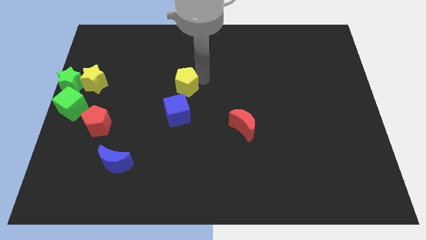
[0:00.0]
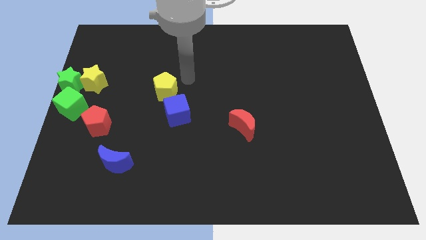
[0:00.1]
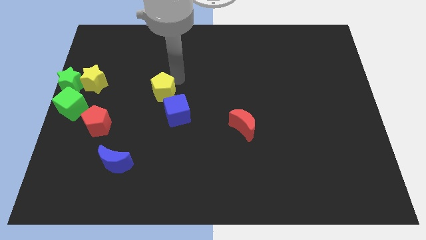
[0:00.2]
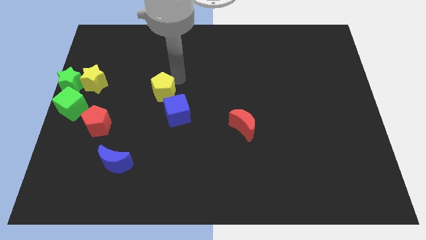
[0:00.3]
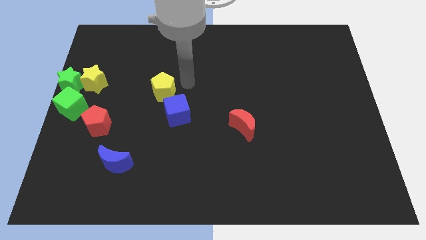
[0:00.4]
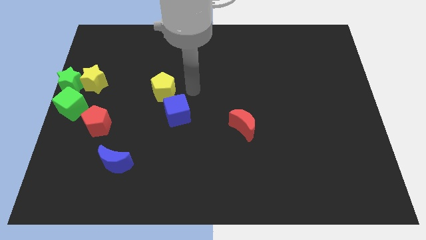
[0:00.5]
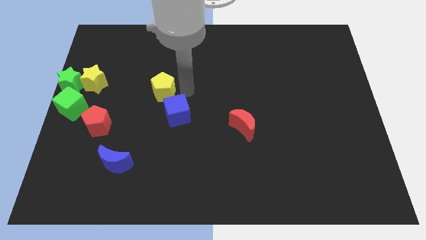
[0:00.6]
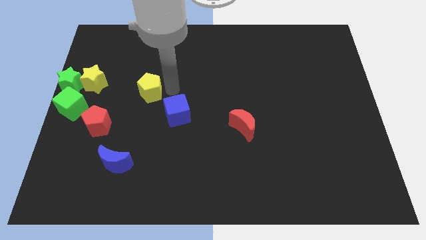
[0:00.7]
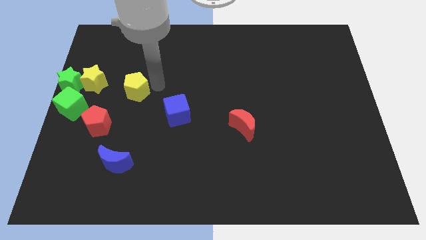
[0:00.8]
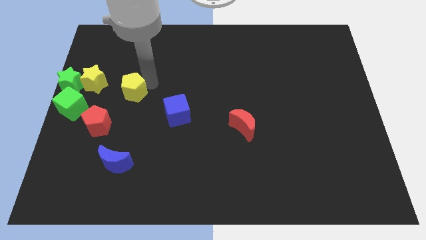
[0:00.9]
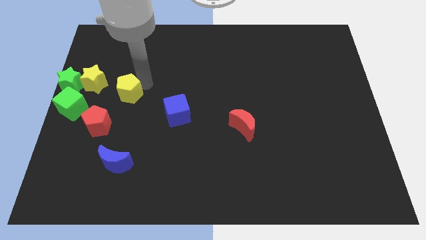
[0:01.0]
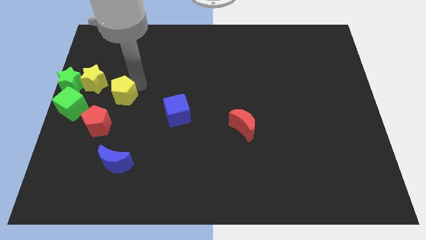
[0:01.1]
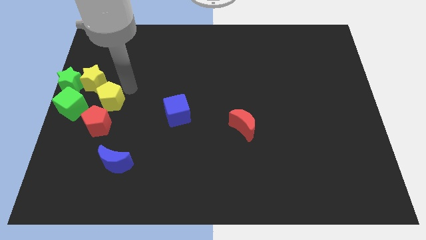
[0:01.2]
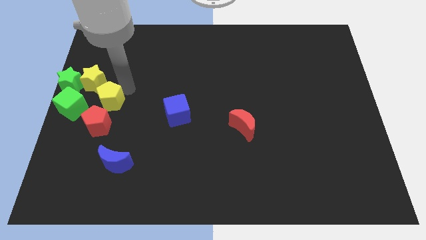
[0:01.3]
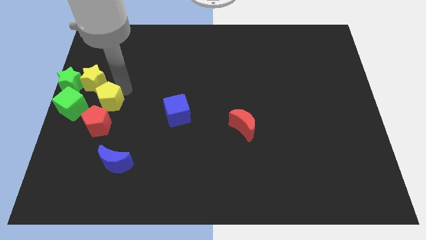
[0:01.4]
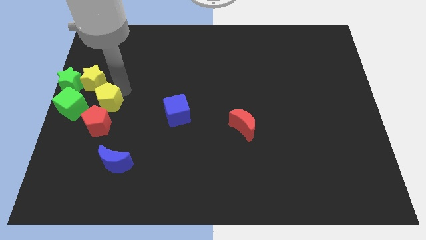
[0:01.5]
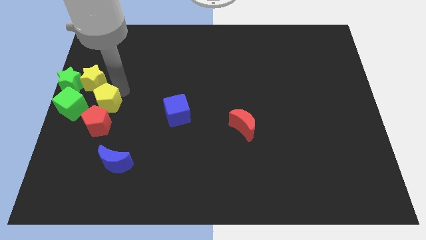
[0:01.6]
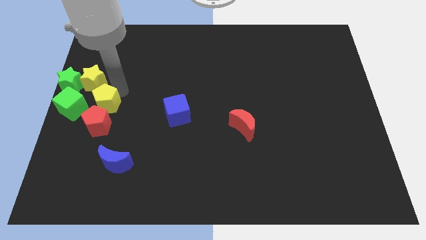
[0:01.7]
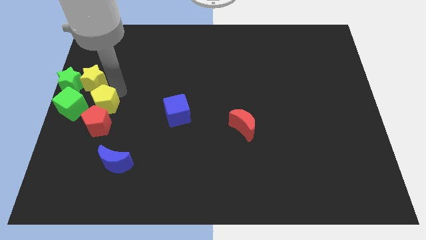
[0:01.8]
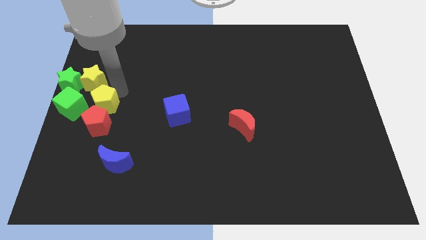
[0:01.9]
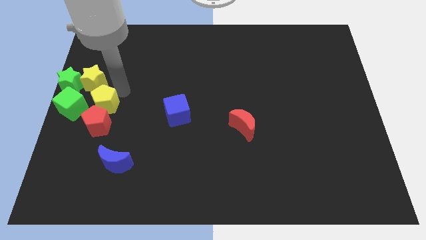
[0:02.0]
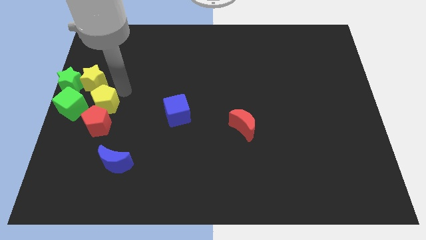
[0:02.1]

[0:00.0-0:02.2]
place the yellow pentagon to the right of green cube

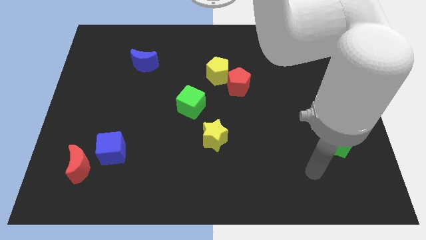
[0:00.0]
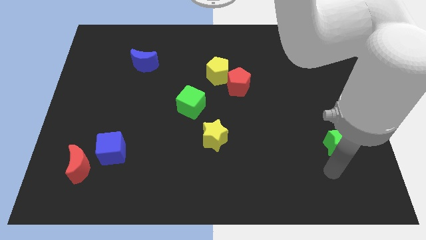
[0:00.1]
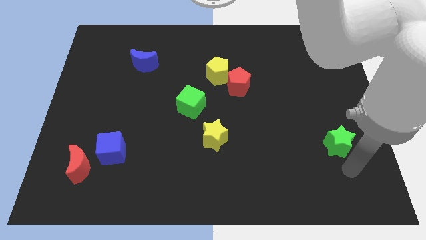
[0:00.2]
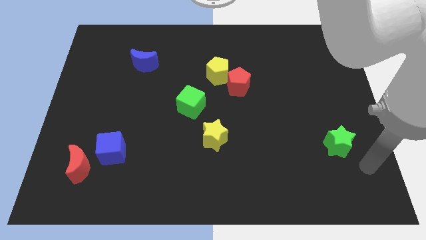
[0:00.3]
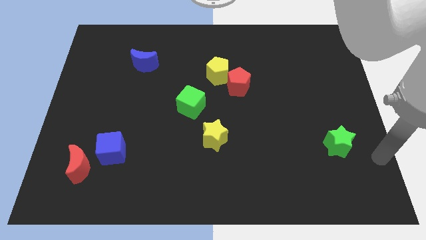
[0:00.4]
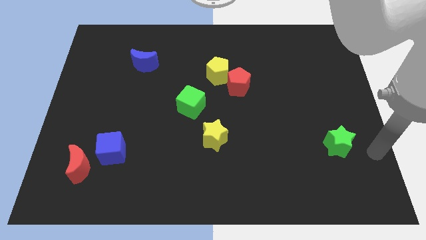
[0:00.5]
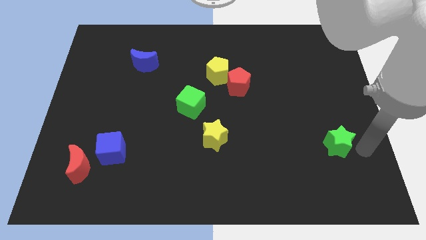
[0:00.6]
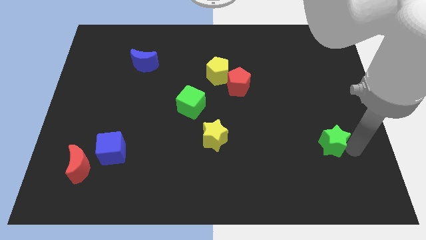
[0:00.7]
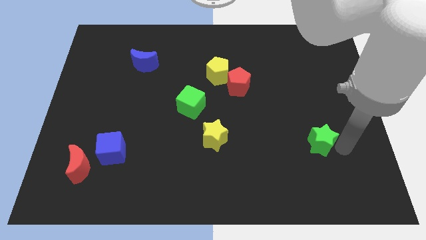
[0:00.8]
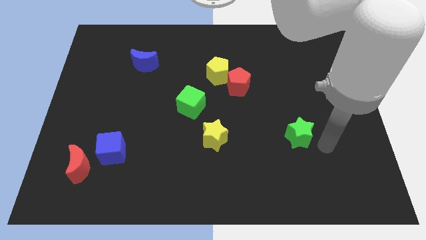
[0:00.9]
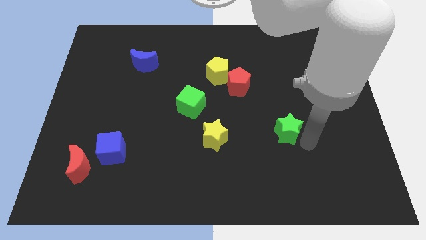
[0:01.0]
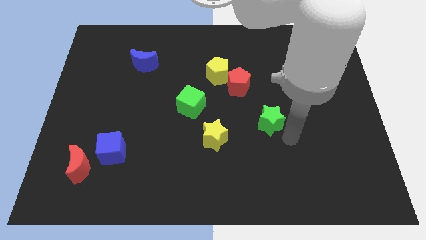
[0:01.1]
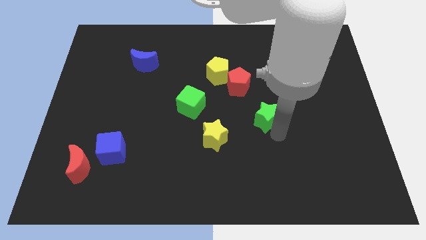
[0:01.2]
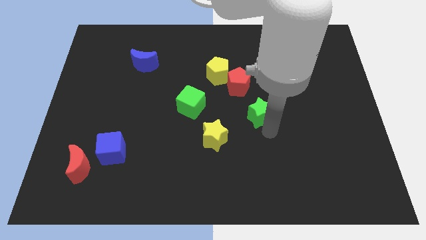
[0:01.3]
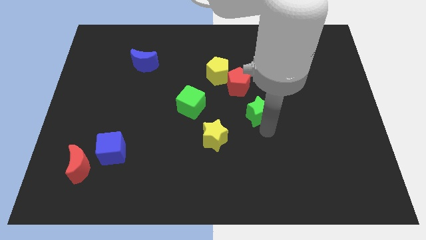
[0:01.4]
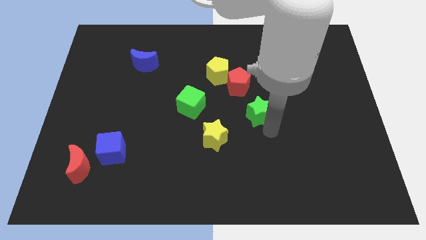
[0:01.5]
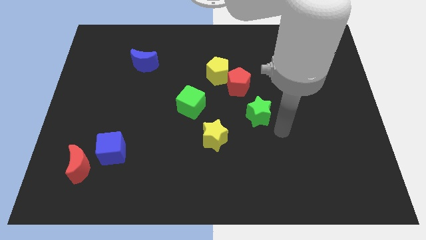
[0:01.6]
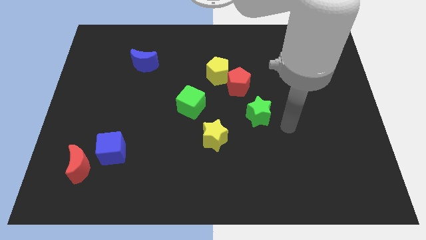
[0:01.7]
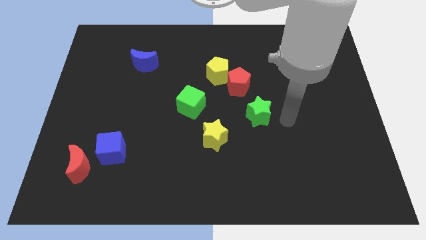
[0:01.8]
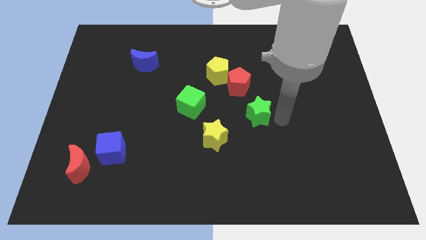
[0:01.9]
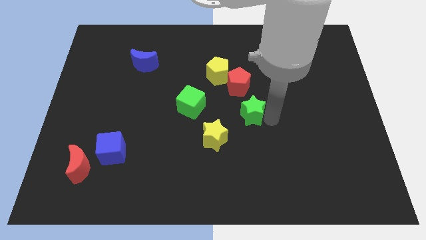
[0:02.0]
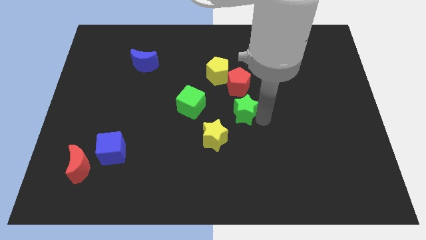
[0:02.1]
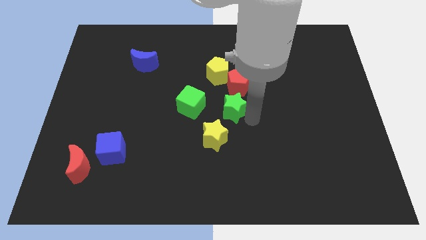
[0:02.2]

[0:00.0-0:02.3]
push green star below red pentagon

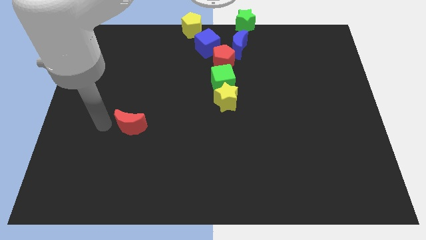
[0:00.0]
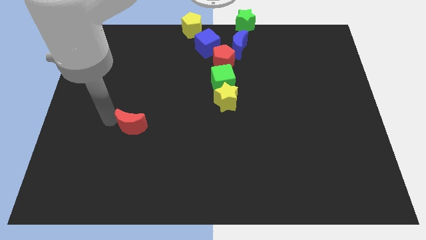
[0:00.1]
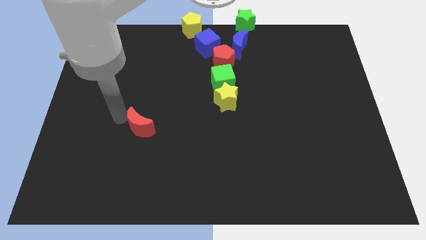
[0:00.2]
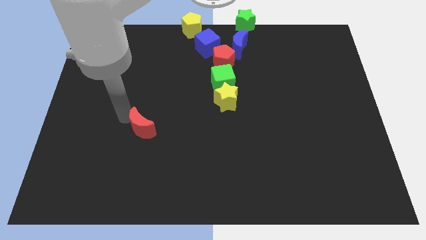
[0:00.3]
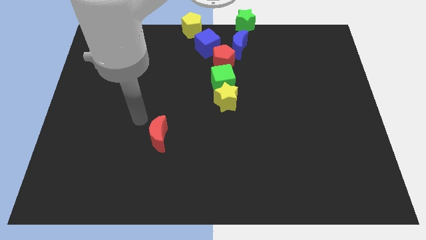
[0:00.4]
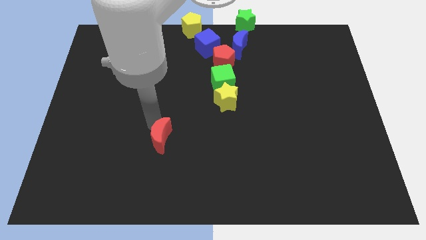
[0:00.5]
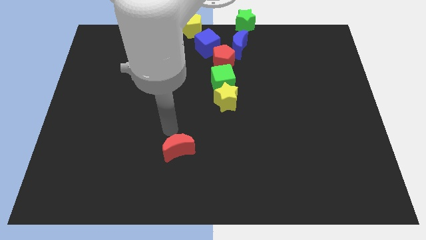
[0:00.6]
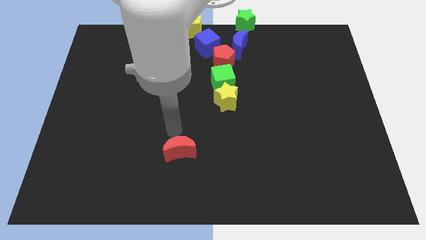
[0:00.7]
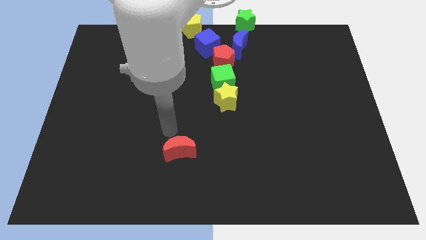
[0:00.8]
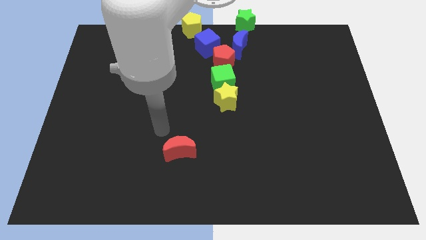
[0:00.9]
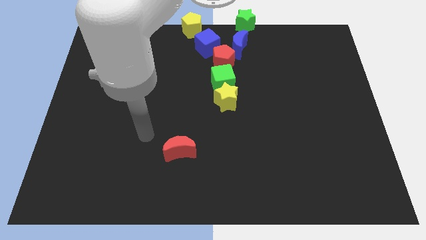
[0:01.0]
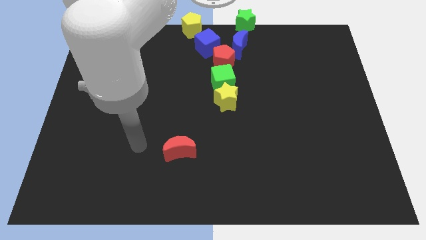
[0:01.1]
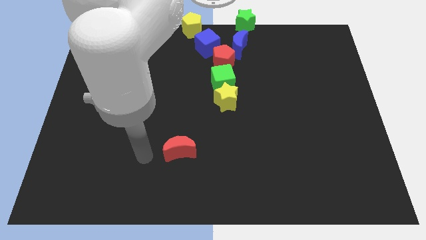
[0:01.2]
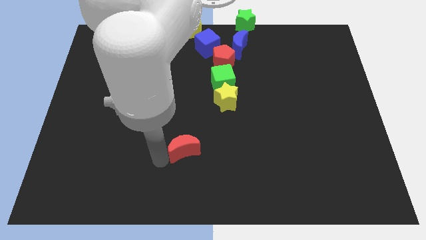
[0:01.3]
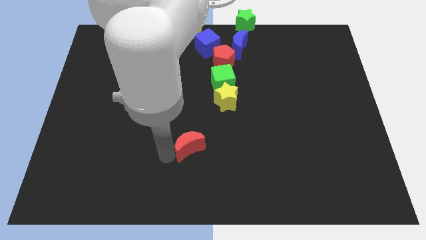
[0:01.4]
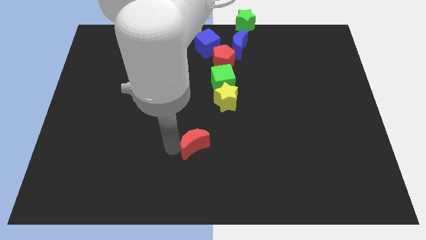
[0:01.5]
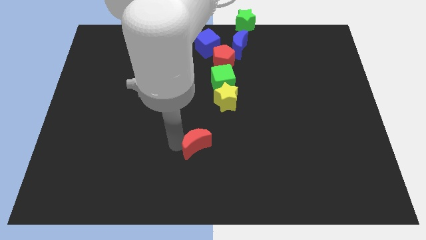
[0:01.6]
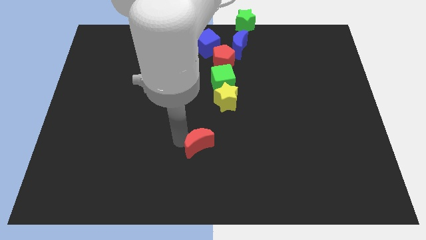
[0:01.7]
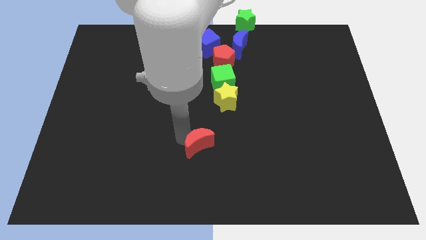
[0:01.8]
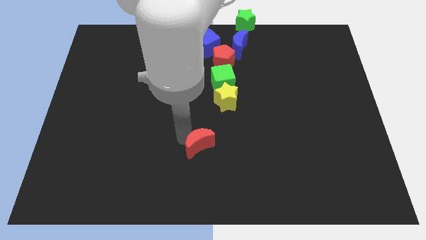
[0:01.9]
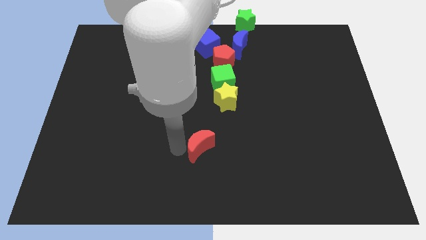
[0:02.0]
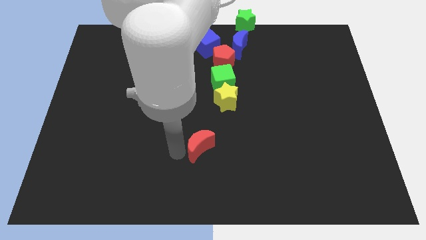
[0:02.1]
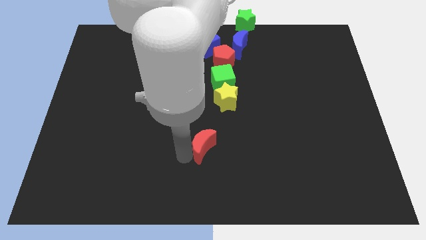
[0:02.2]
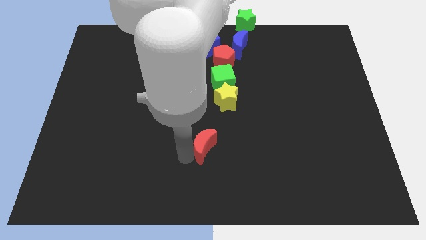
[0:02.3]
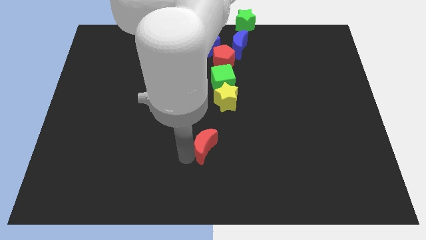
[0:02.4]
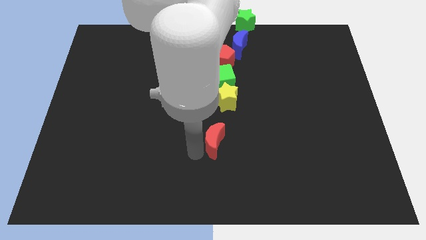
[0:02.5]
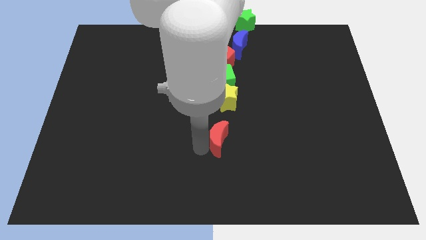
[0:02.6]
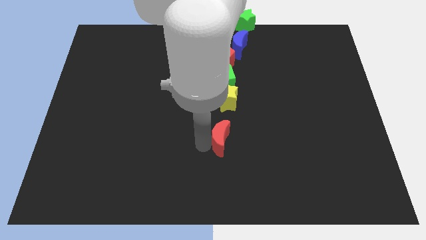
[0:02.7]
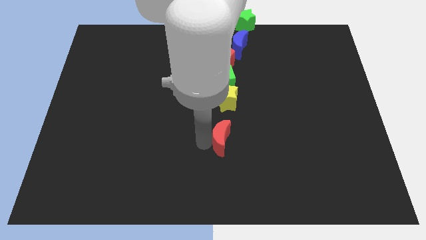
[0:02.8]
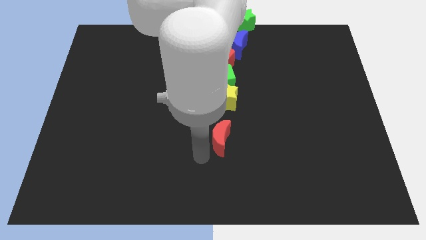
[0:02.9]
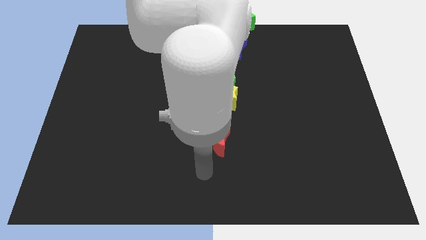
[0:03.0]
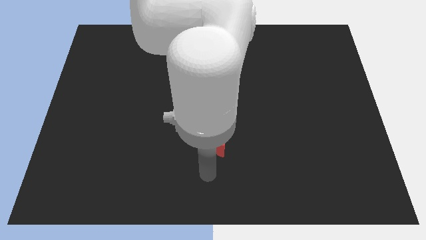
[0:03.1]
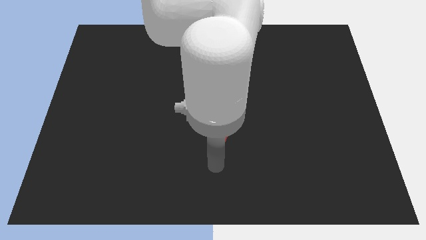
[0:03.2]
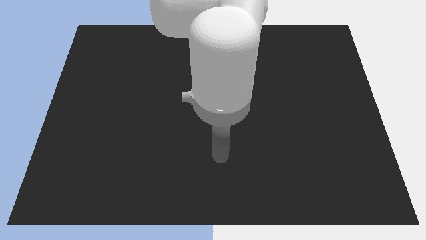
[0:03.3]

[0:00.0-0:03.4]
push the red crescent parallel to the yellow star

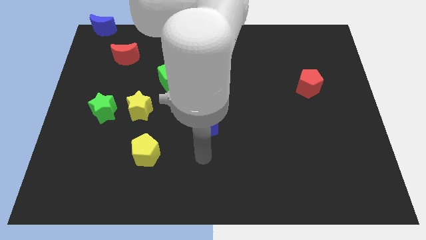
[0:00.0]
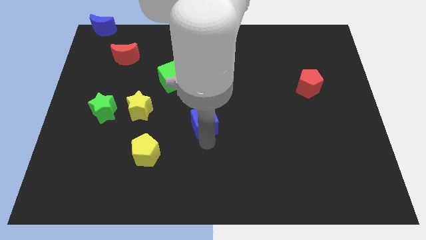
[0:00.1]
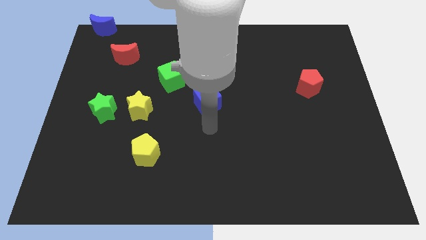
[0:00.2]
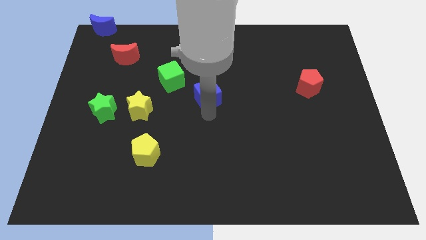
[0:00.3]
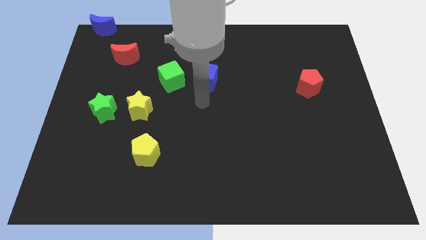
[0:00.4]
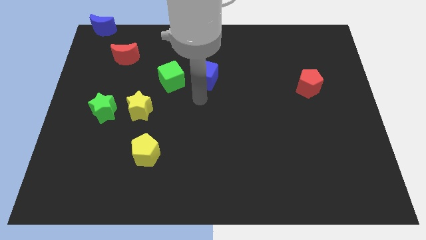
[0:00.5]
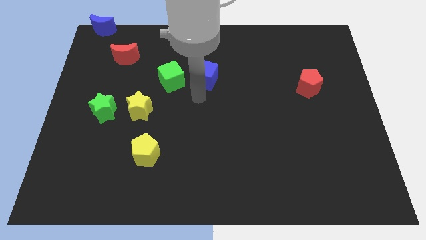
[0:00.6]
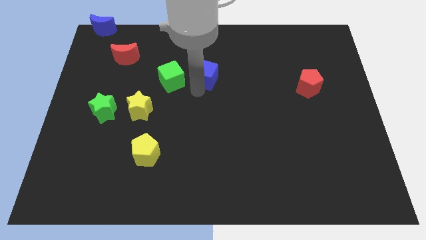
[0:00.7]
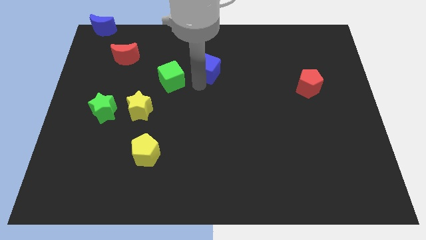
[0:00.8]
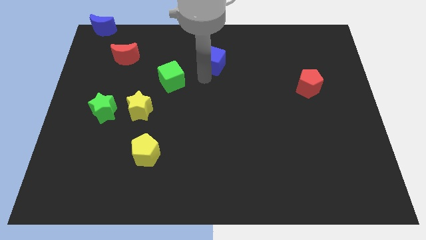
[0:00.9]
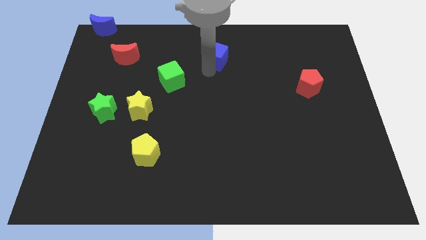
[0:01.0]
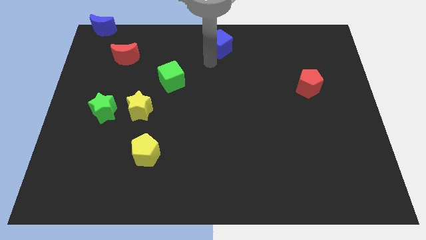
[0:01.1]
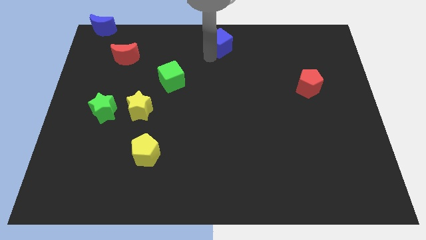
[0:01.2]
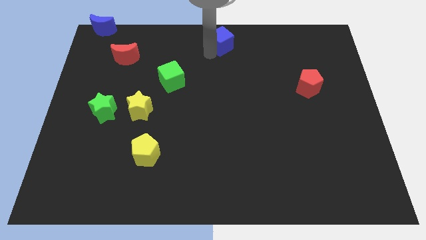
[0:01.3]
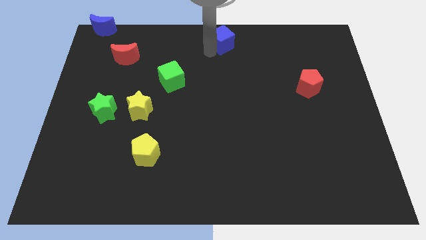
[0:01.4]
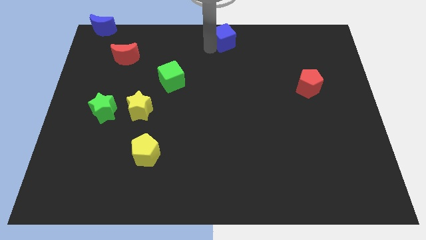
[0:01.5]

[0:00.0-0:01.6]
move the blue cube to the top center of the board
